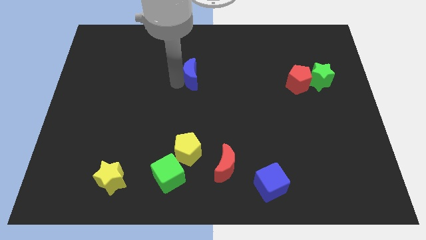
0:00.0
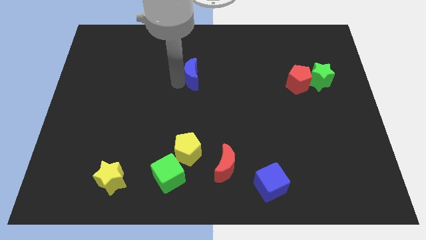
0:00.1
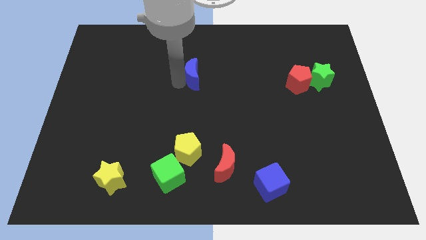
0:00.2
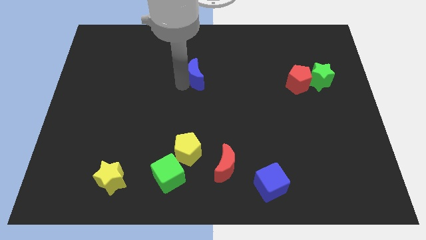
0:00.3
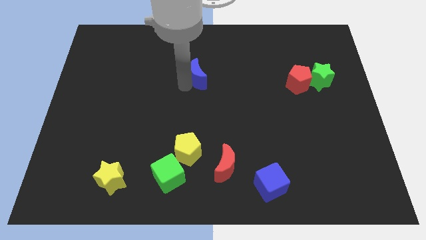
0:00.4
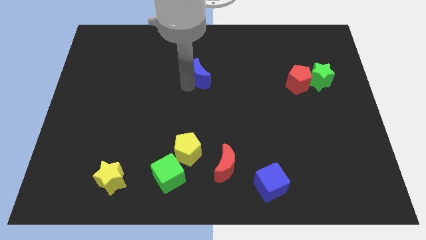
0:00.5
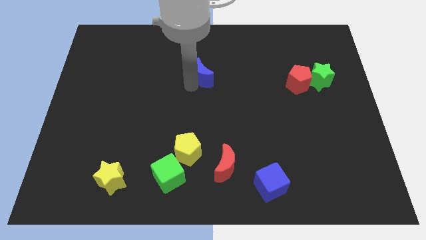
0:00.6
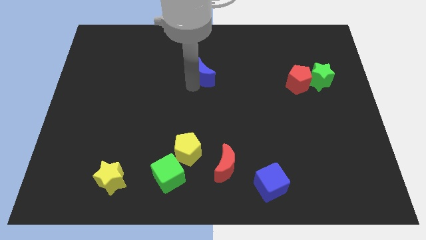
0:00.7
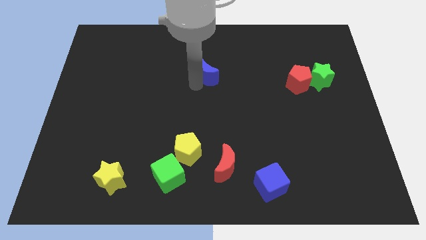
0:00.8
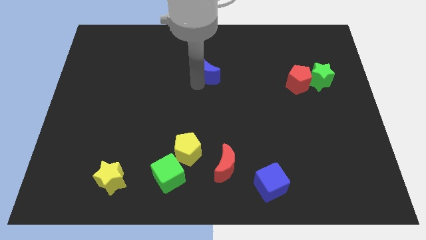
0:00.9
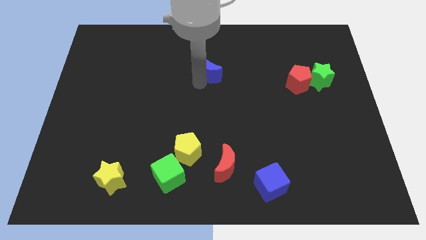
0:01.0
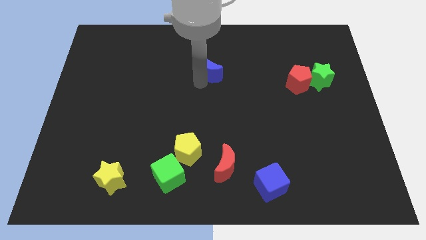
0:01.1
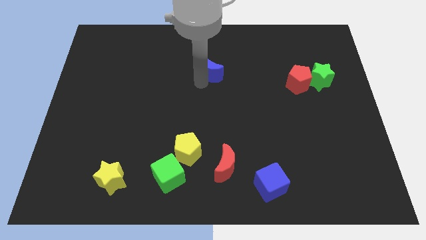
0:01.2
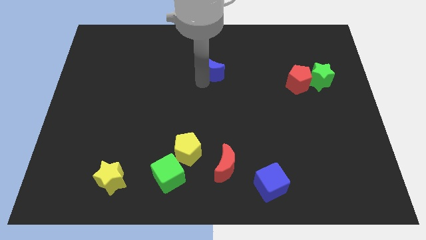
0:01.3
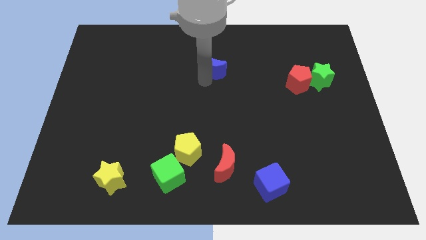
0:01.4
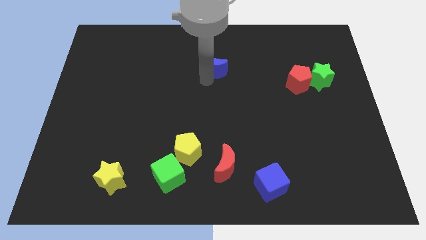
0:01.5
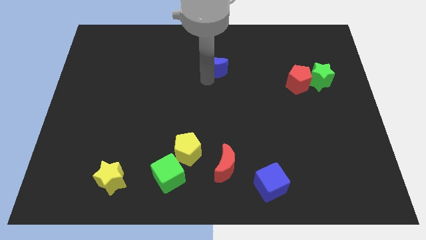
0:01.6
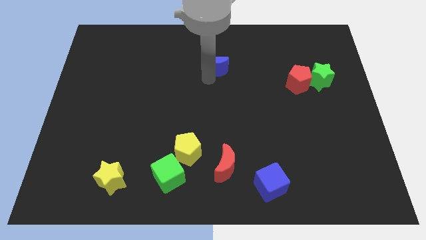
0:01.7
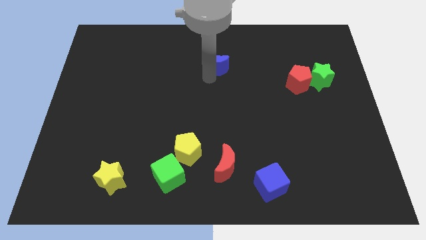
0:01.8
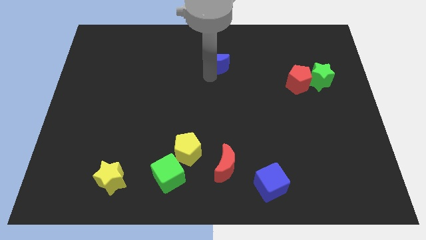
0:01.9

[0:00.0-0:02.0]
move the blue moon towards top center

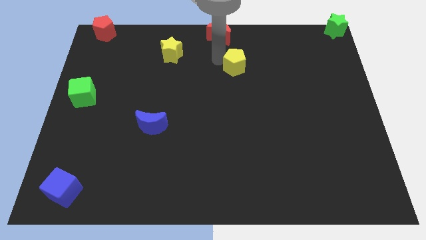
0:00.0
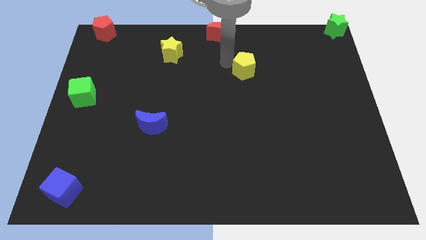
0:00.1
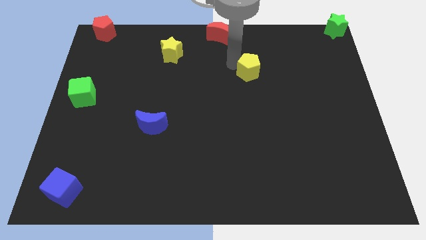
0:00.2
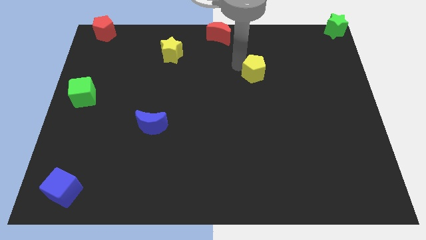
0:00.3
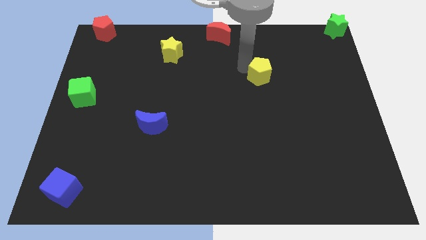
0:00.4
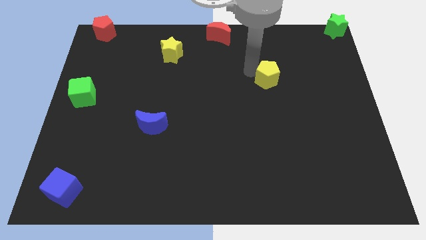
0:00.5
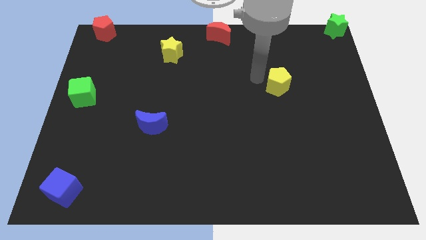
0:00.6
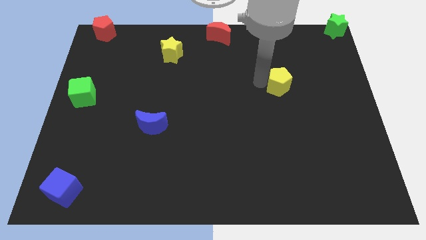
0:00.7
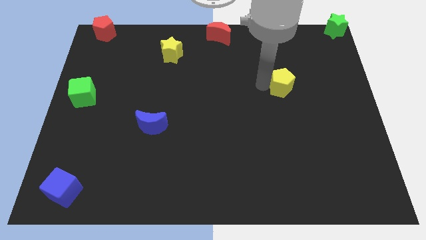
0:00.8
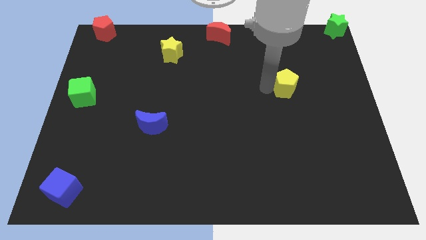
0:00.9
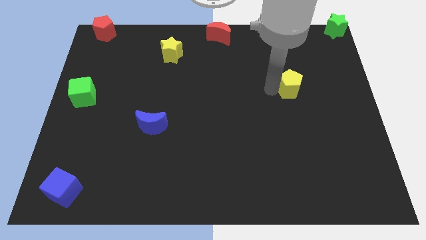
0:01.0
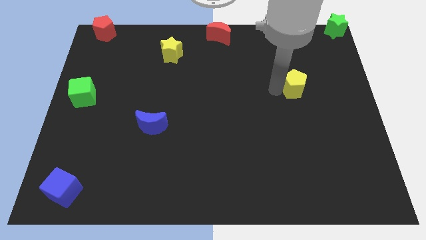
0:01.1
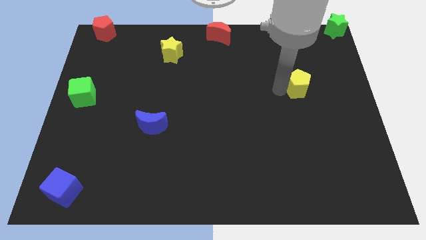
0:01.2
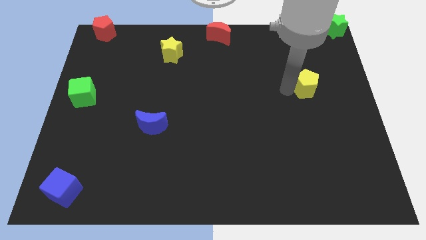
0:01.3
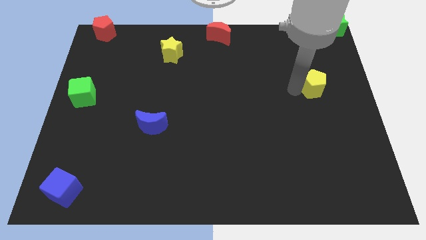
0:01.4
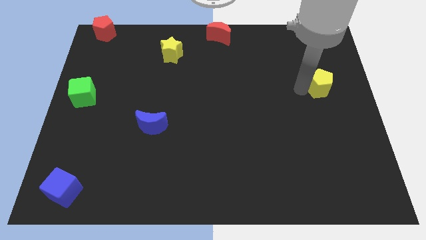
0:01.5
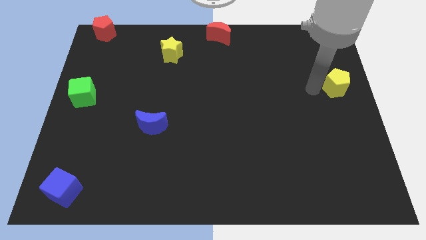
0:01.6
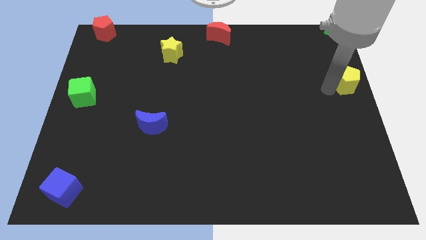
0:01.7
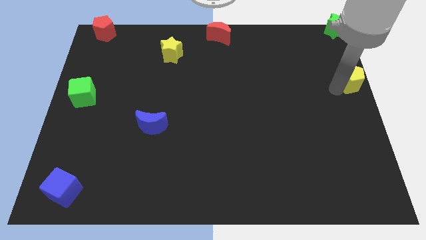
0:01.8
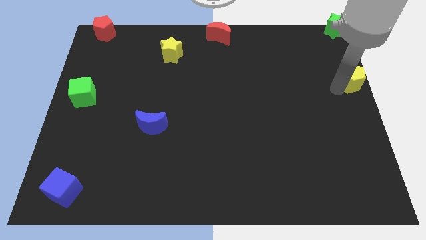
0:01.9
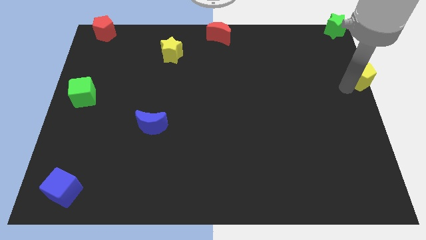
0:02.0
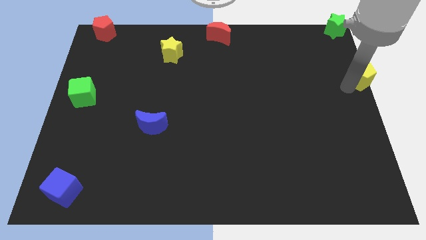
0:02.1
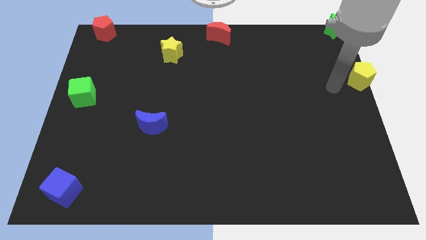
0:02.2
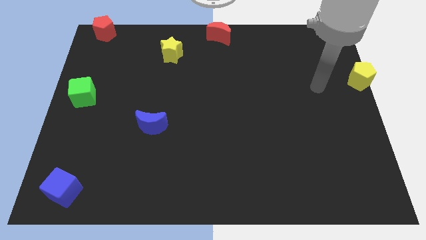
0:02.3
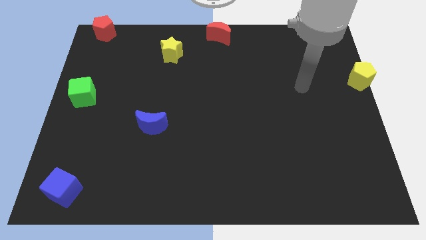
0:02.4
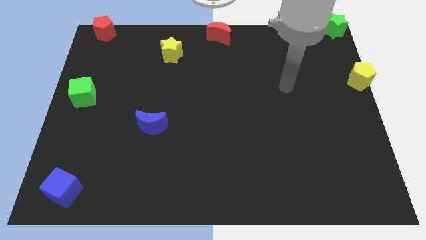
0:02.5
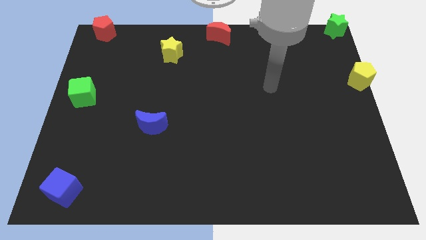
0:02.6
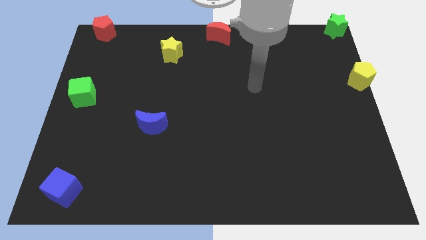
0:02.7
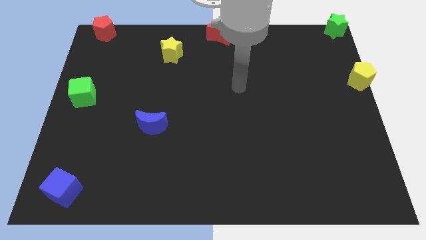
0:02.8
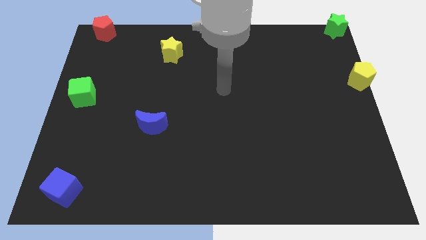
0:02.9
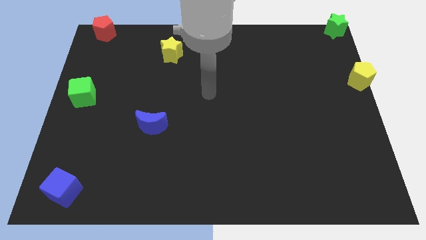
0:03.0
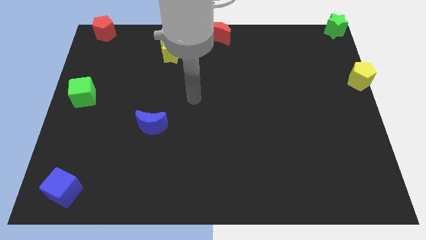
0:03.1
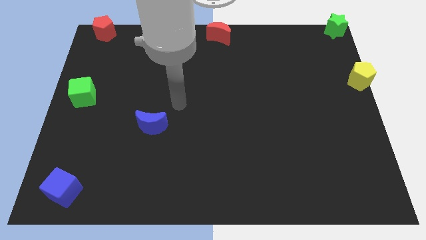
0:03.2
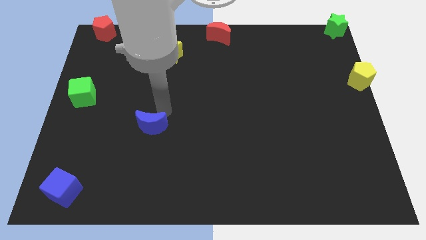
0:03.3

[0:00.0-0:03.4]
place the yellow pentagon vertically below the green star

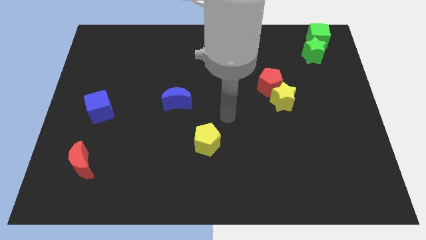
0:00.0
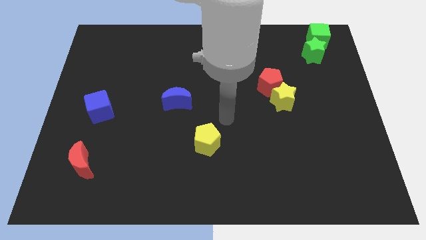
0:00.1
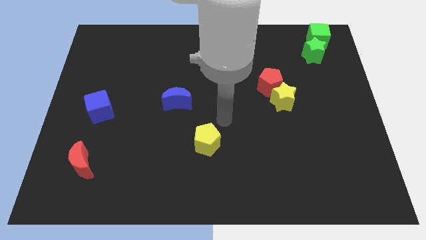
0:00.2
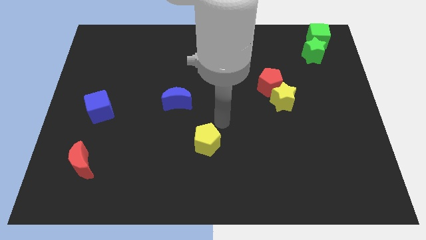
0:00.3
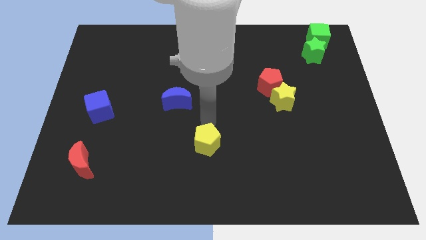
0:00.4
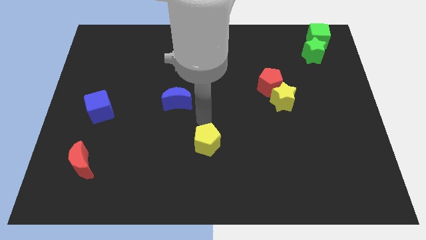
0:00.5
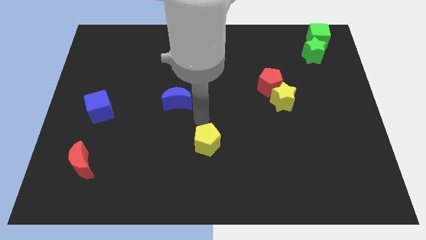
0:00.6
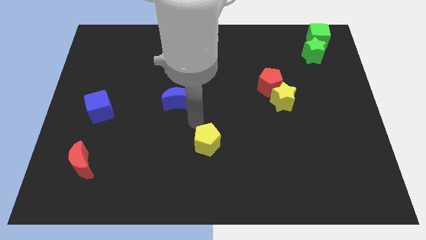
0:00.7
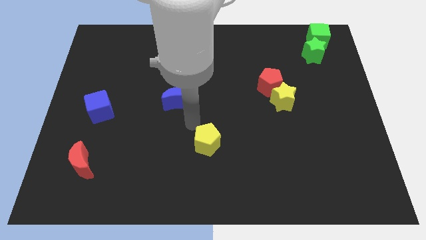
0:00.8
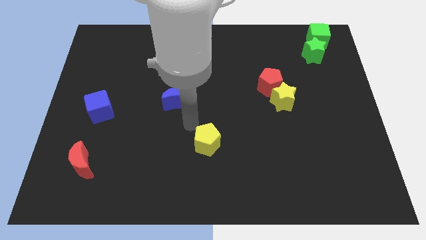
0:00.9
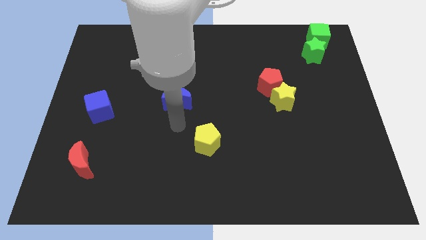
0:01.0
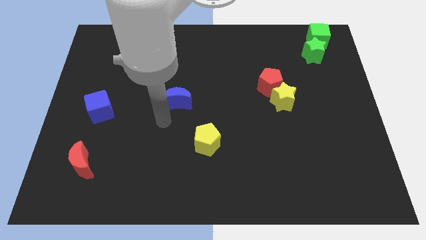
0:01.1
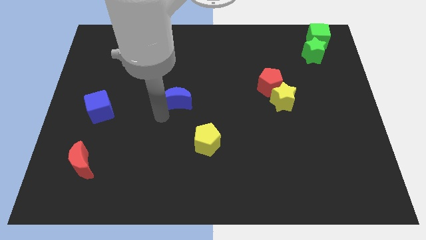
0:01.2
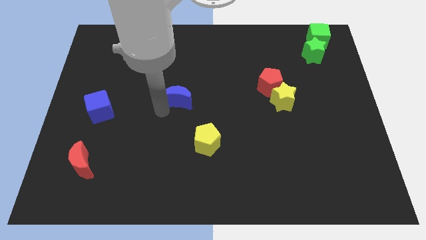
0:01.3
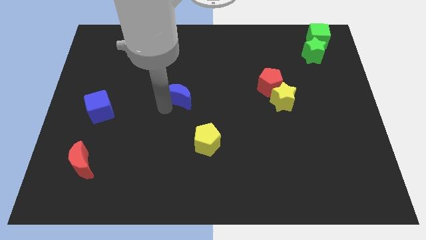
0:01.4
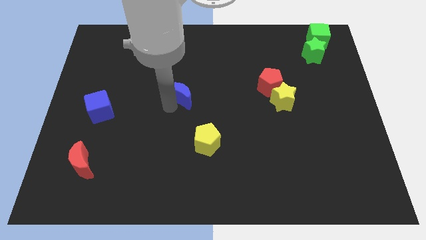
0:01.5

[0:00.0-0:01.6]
place the arm below the blue crescent

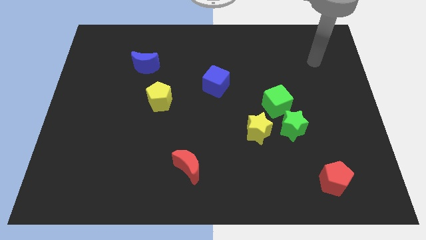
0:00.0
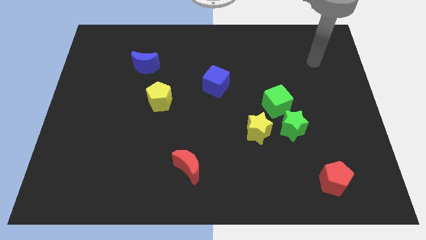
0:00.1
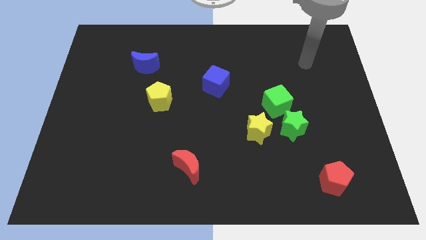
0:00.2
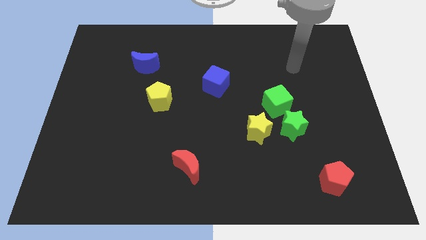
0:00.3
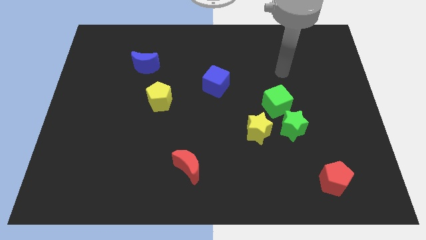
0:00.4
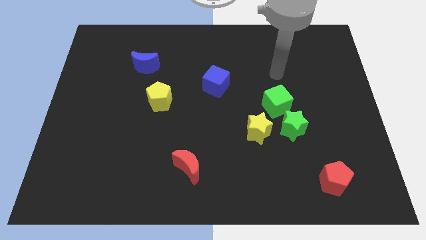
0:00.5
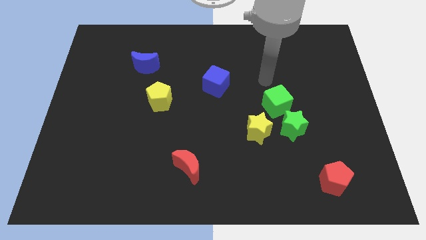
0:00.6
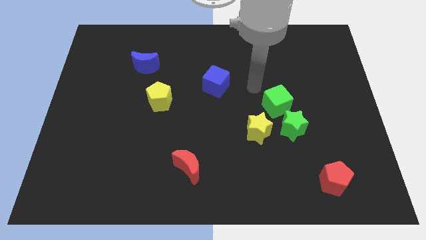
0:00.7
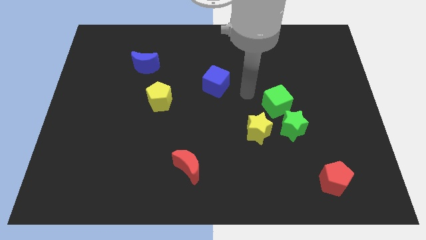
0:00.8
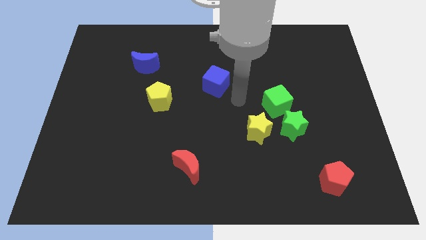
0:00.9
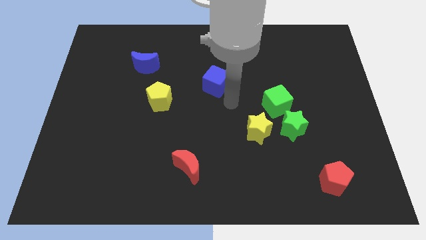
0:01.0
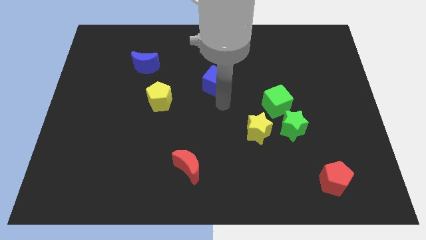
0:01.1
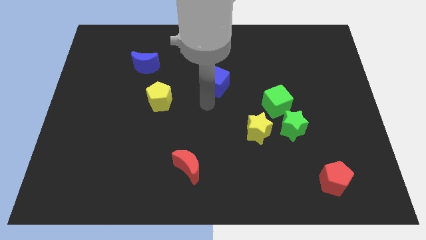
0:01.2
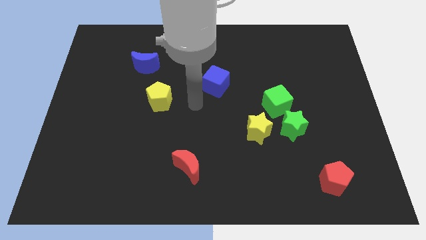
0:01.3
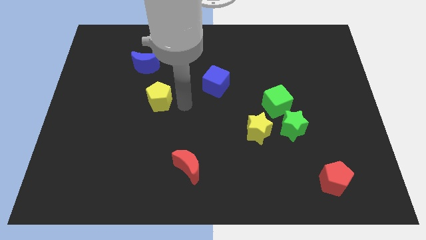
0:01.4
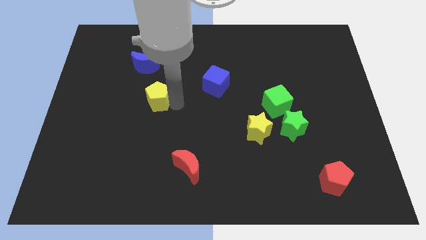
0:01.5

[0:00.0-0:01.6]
tap the right side of the yellow pentagon

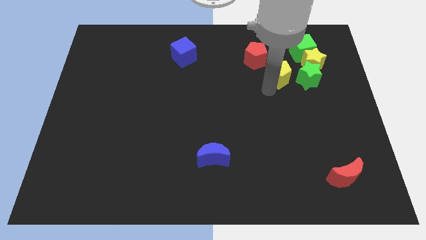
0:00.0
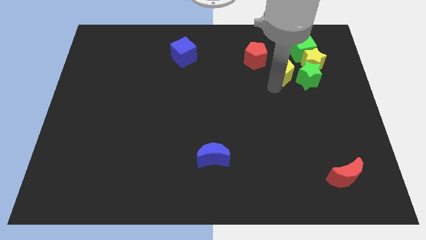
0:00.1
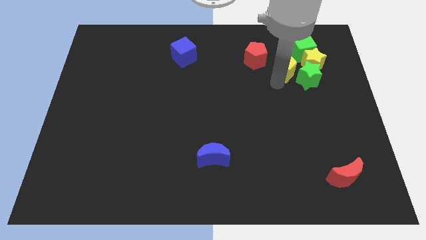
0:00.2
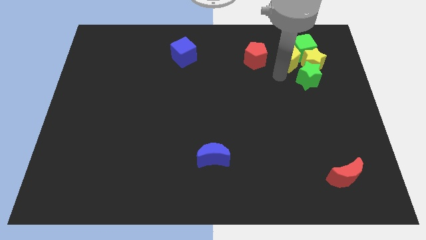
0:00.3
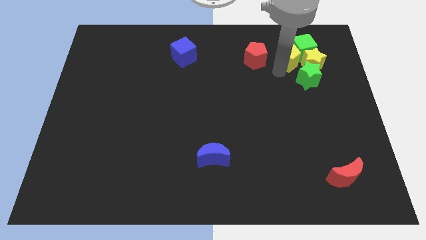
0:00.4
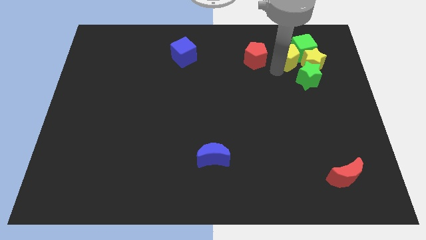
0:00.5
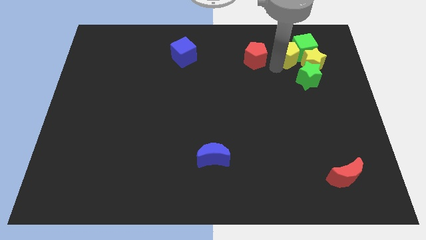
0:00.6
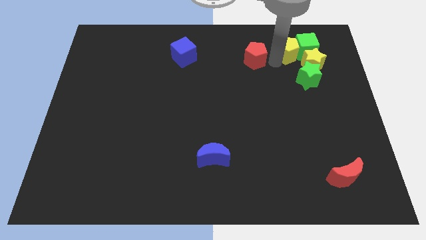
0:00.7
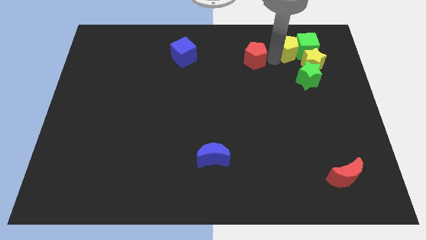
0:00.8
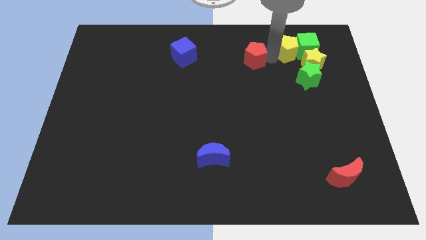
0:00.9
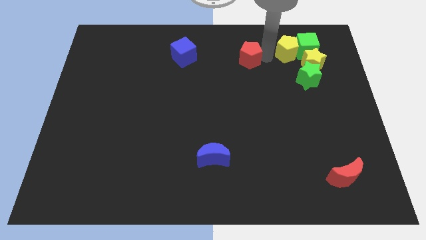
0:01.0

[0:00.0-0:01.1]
push the yellow pentagon to the left of the green cube
